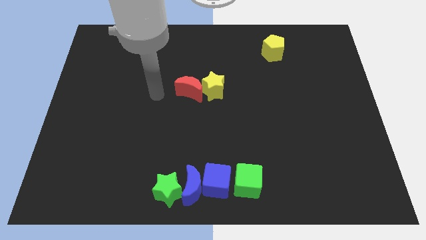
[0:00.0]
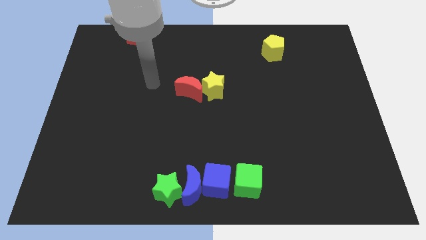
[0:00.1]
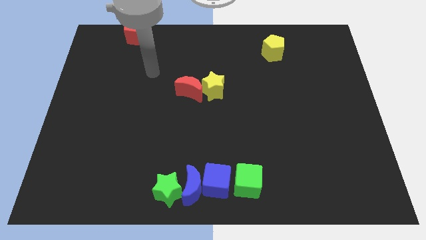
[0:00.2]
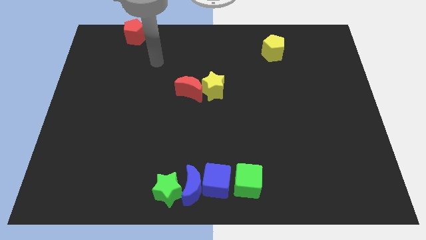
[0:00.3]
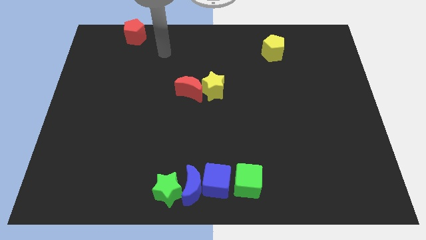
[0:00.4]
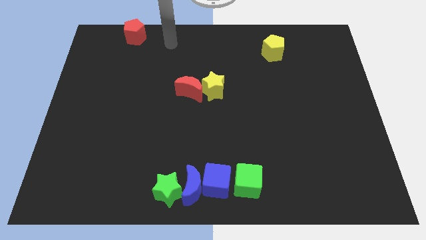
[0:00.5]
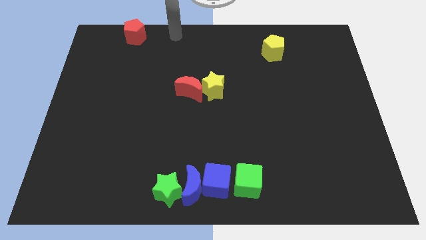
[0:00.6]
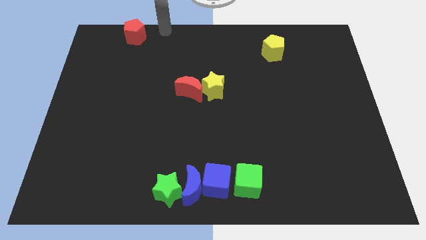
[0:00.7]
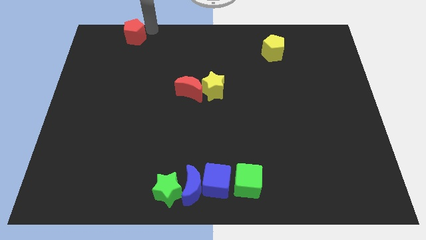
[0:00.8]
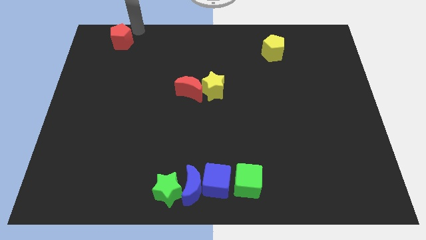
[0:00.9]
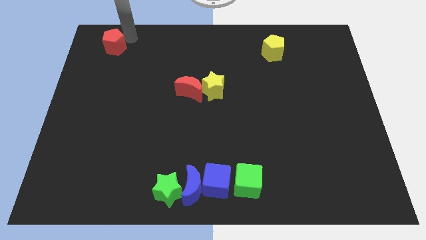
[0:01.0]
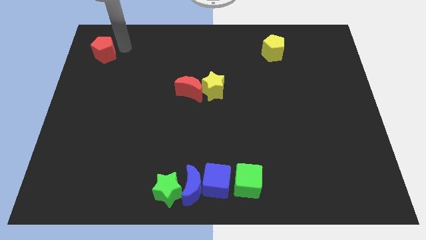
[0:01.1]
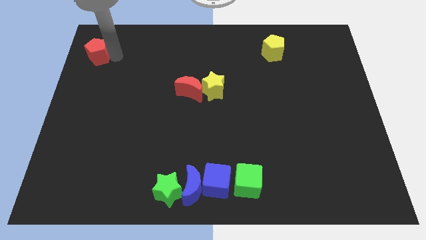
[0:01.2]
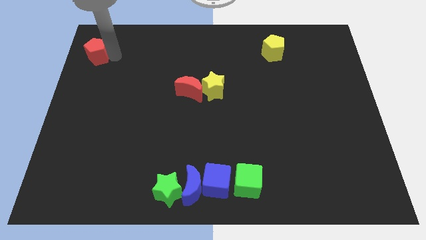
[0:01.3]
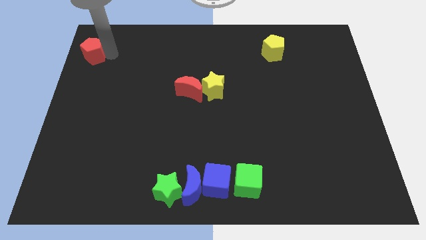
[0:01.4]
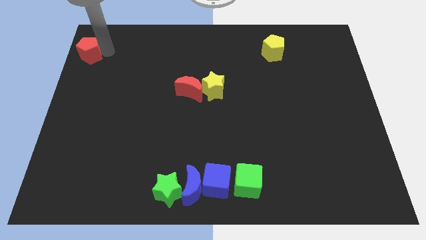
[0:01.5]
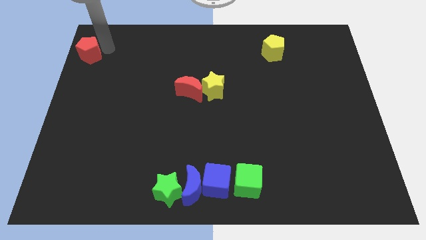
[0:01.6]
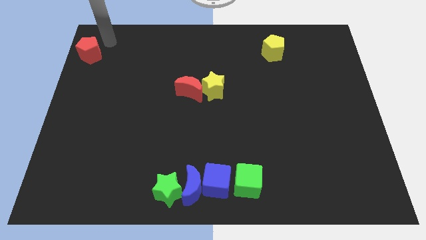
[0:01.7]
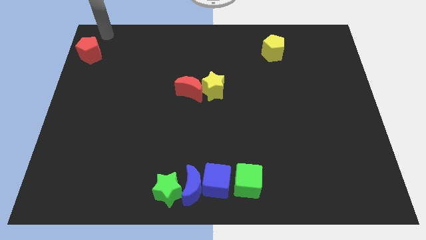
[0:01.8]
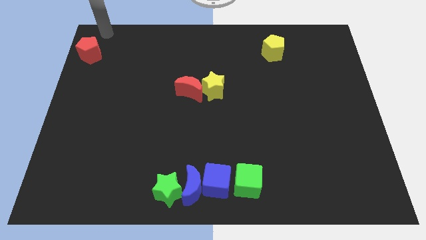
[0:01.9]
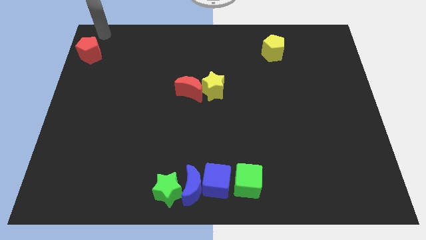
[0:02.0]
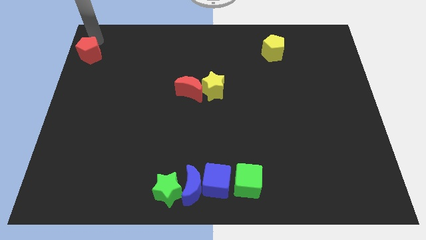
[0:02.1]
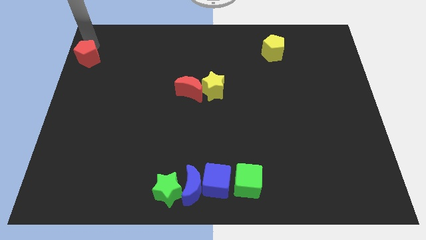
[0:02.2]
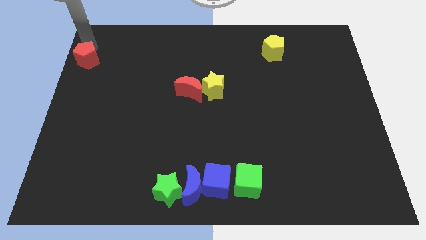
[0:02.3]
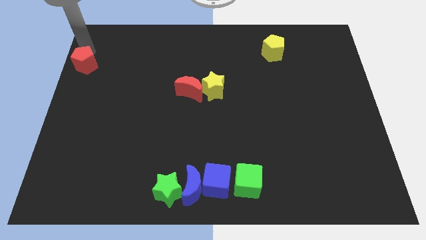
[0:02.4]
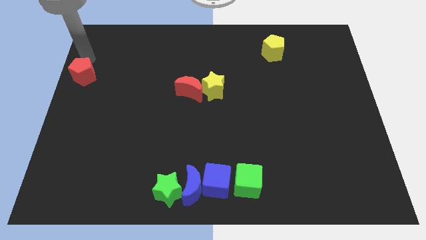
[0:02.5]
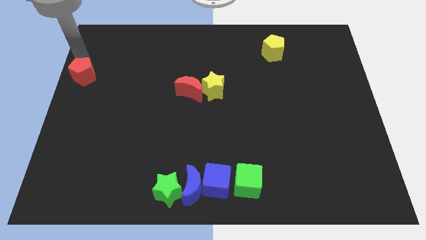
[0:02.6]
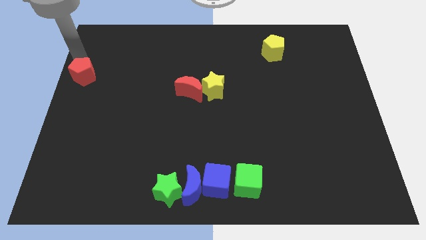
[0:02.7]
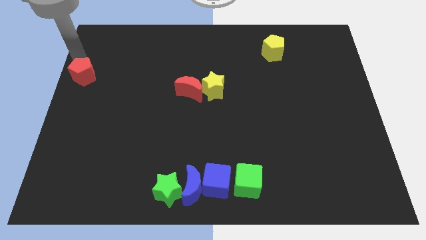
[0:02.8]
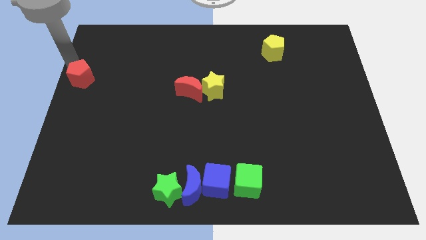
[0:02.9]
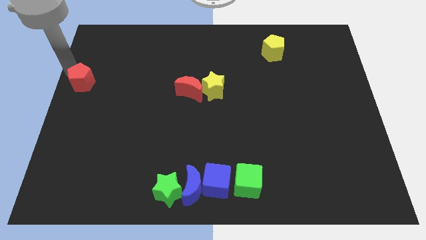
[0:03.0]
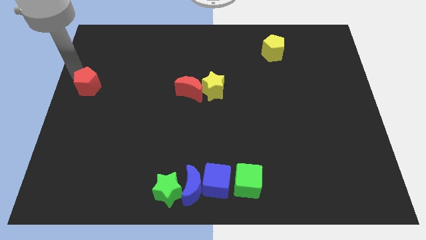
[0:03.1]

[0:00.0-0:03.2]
place the red pentagon parallel left to the red moon

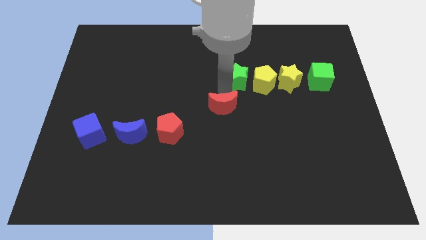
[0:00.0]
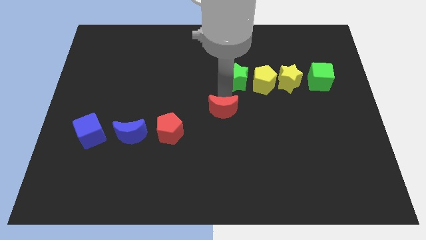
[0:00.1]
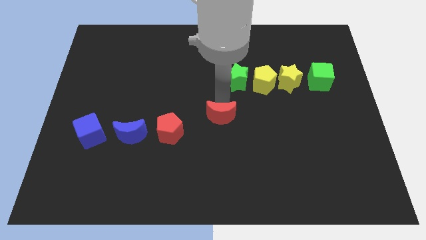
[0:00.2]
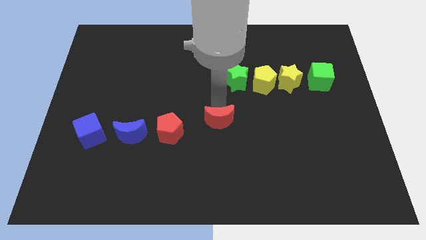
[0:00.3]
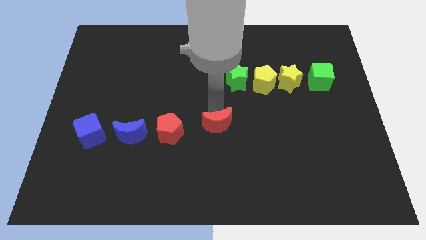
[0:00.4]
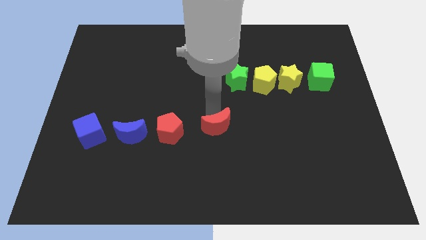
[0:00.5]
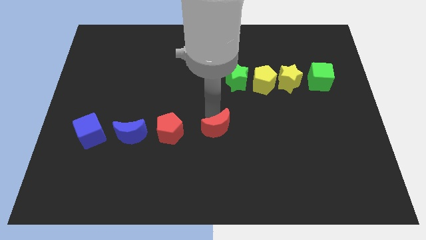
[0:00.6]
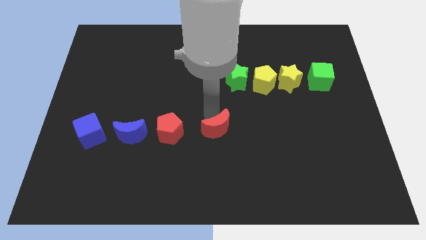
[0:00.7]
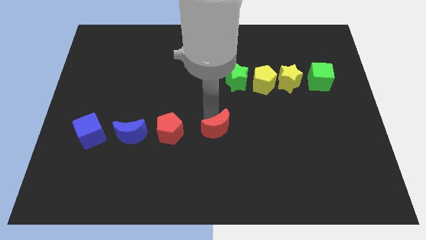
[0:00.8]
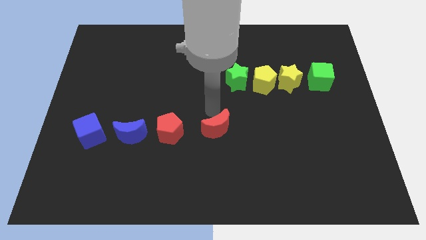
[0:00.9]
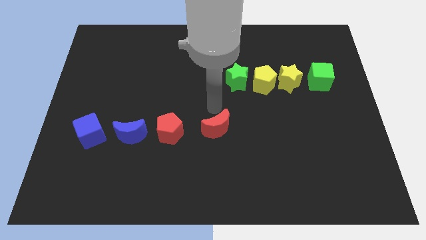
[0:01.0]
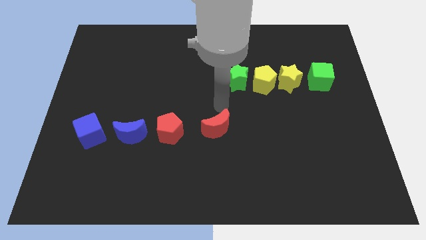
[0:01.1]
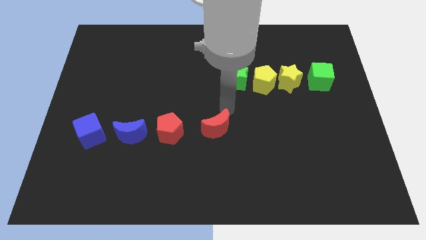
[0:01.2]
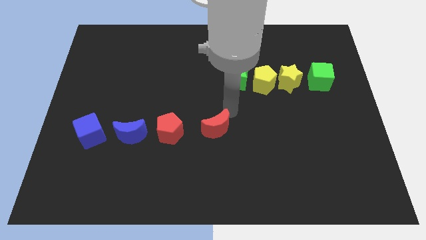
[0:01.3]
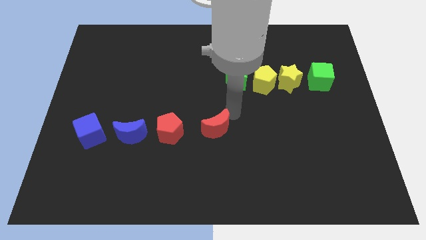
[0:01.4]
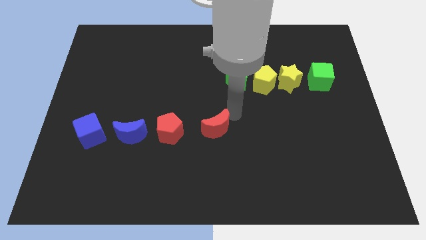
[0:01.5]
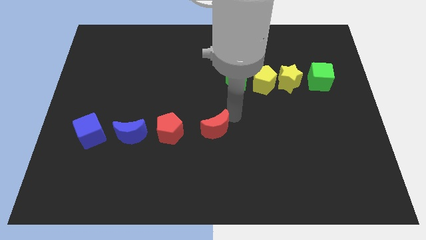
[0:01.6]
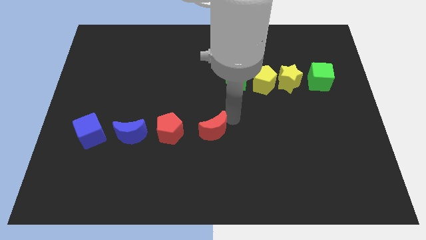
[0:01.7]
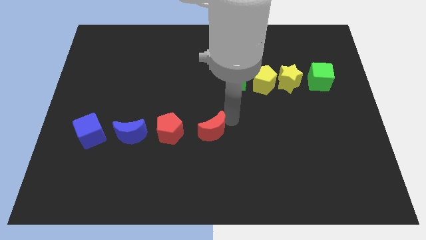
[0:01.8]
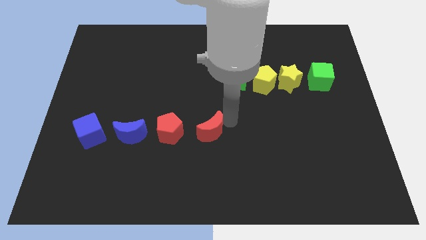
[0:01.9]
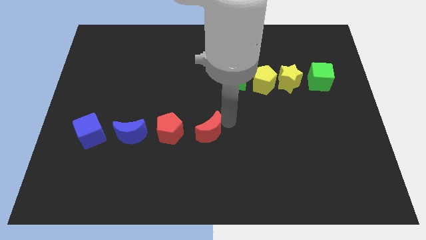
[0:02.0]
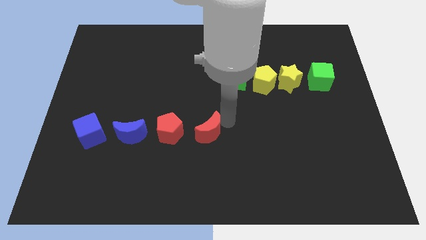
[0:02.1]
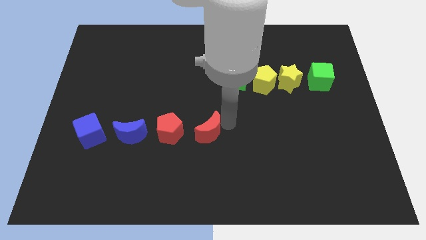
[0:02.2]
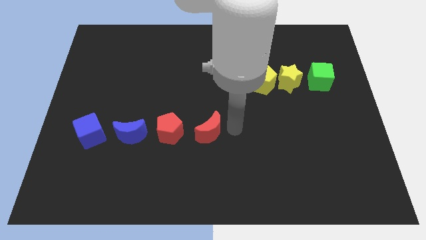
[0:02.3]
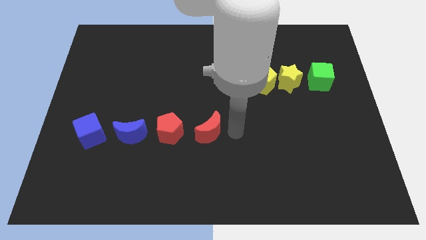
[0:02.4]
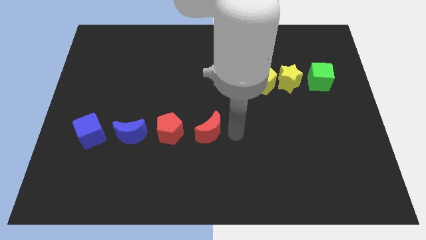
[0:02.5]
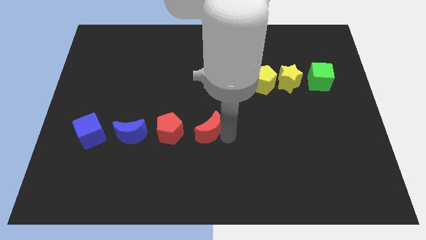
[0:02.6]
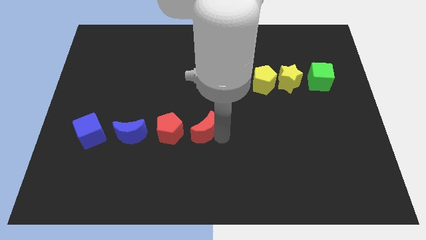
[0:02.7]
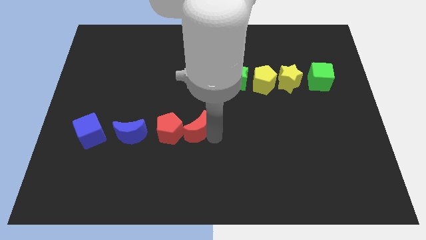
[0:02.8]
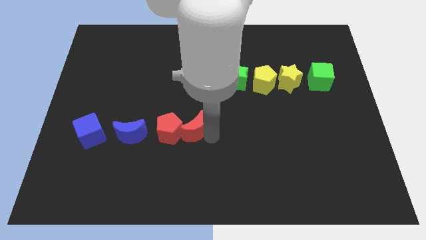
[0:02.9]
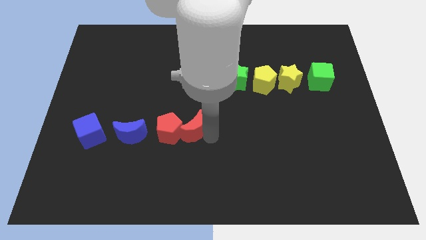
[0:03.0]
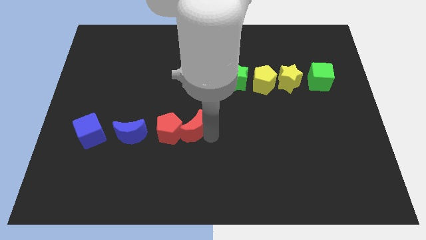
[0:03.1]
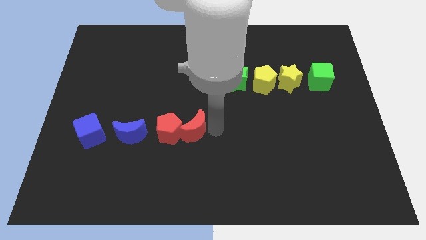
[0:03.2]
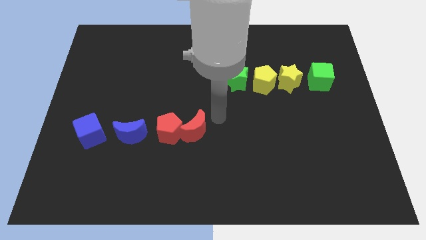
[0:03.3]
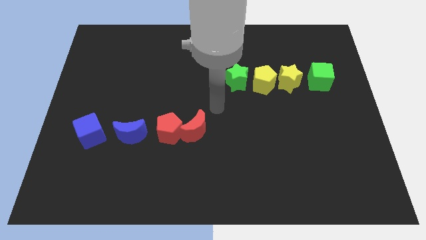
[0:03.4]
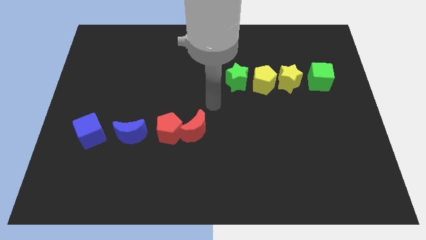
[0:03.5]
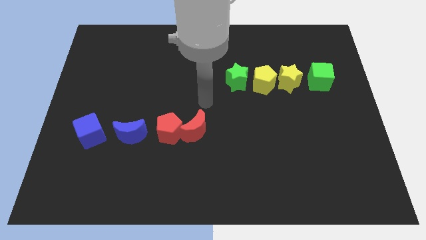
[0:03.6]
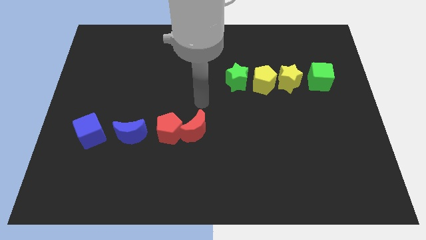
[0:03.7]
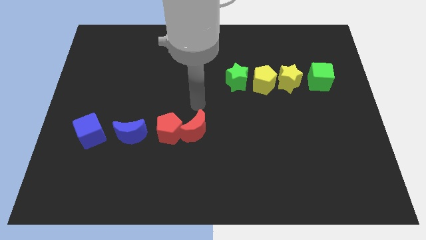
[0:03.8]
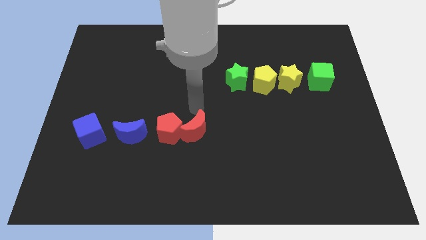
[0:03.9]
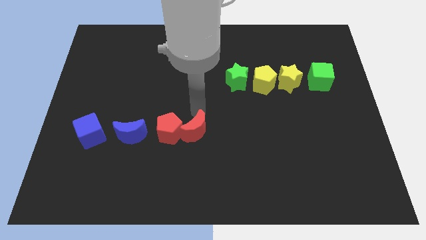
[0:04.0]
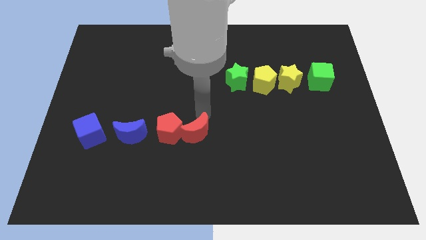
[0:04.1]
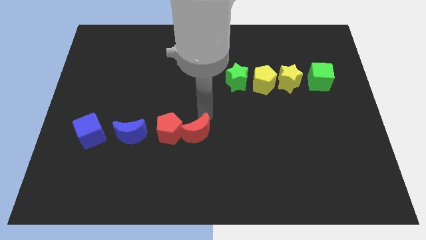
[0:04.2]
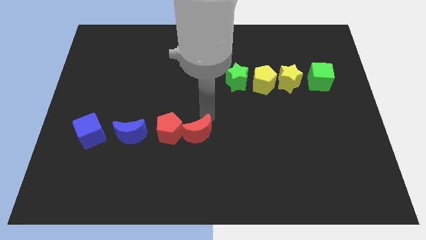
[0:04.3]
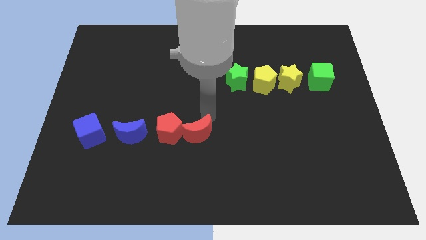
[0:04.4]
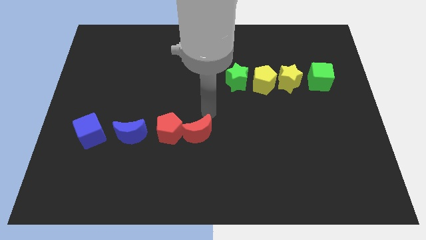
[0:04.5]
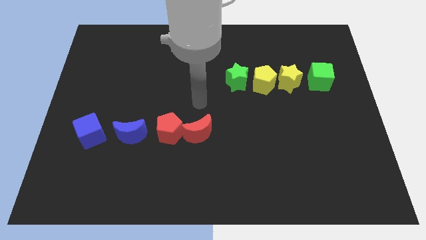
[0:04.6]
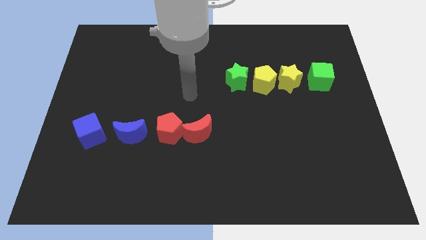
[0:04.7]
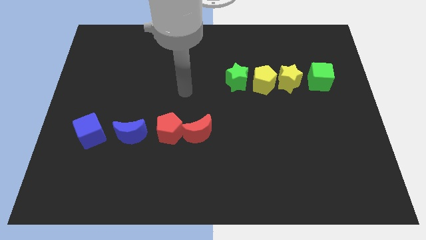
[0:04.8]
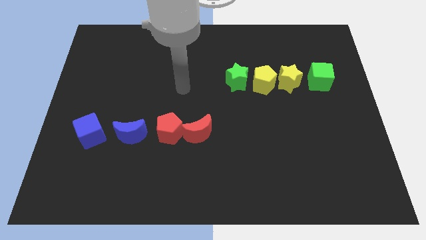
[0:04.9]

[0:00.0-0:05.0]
move the red moon into the red pentagon

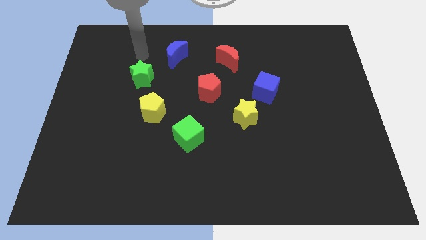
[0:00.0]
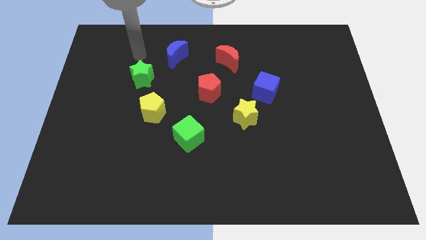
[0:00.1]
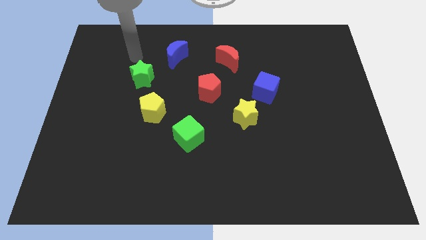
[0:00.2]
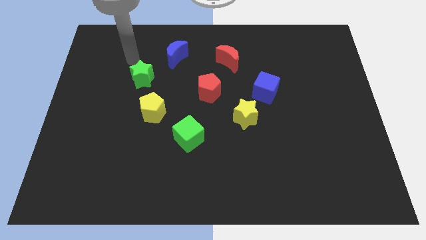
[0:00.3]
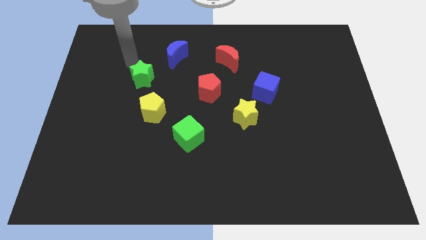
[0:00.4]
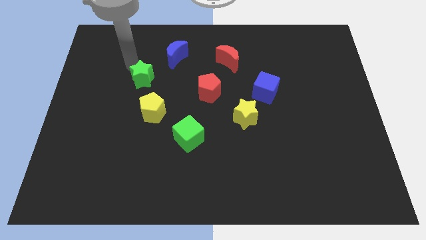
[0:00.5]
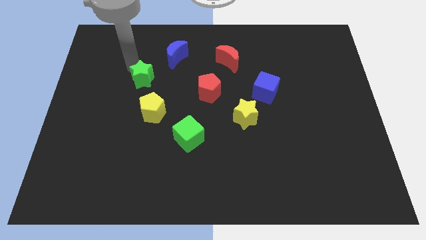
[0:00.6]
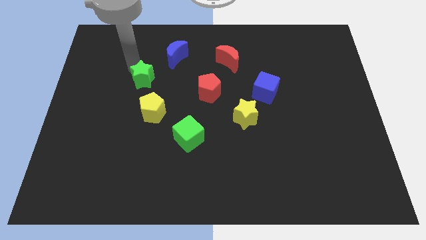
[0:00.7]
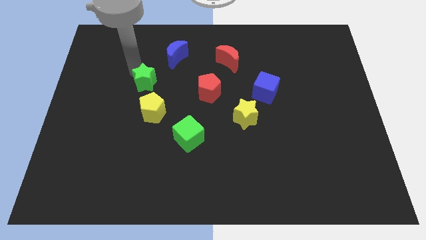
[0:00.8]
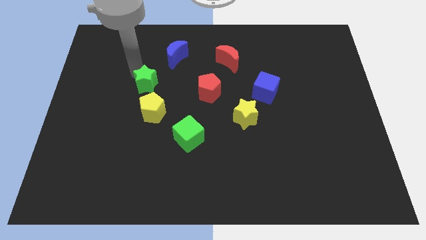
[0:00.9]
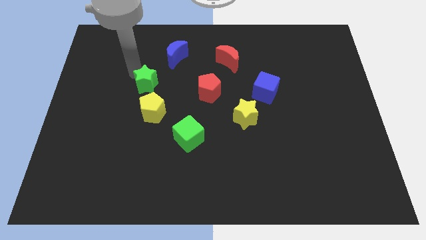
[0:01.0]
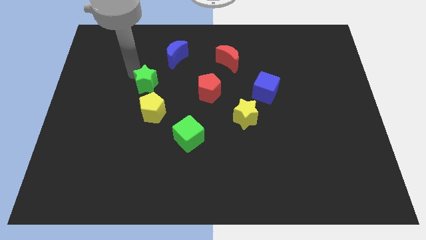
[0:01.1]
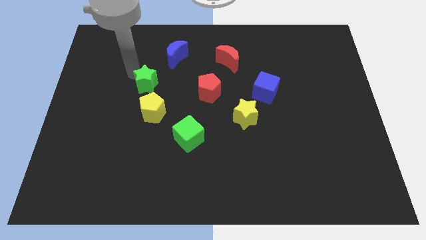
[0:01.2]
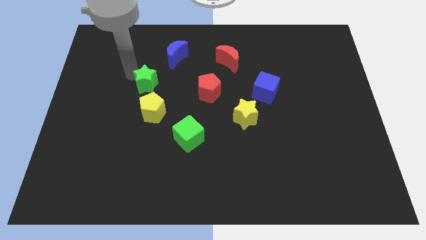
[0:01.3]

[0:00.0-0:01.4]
push the green star close to yellow pentagon
